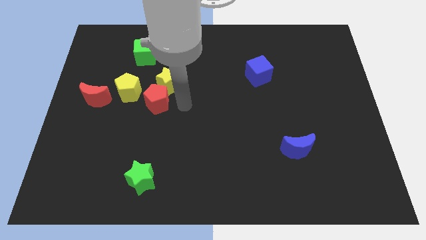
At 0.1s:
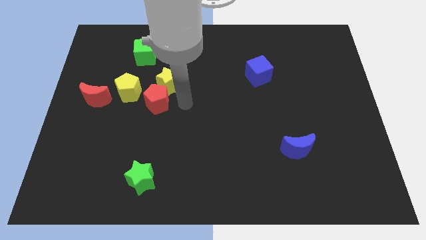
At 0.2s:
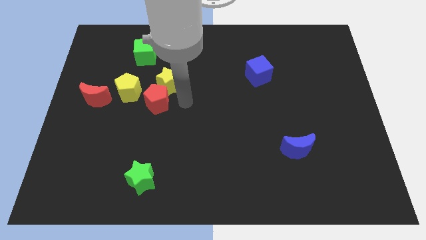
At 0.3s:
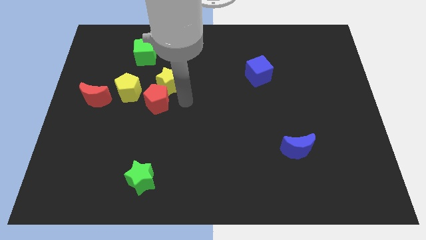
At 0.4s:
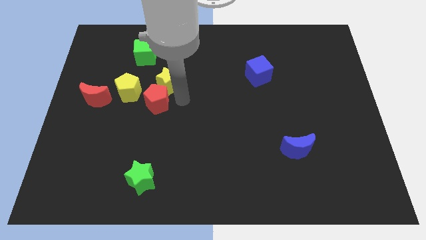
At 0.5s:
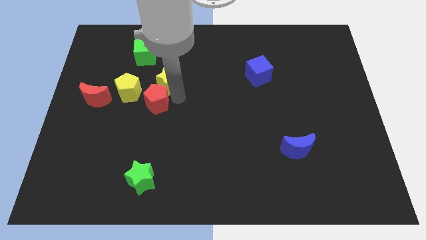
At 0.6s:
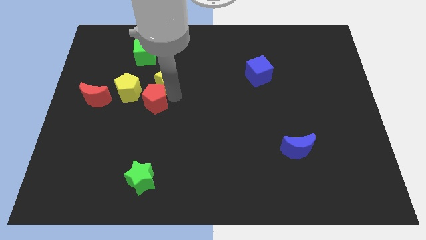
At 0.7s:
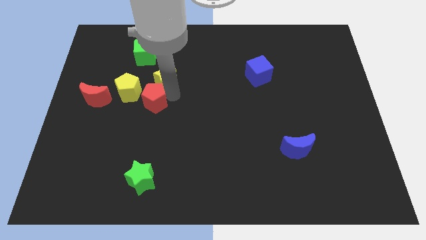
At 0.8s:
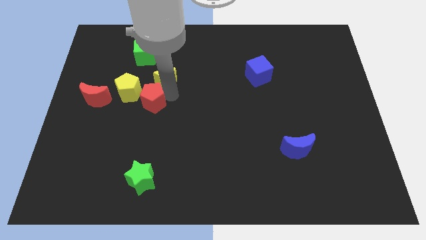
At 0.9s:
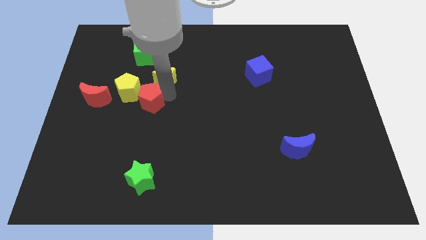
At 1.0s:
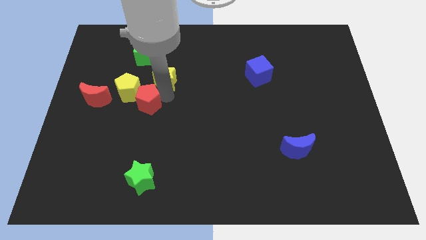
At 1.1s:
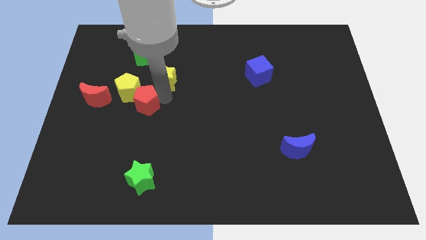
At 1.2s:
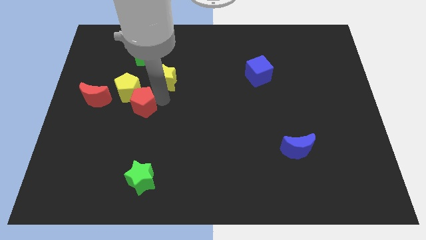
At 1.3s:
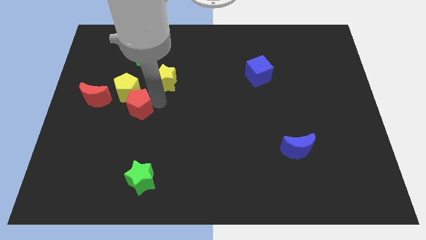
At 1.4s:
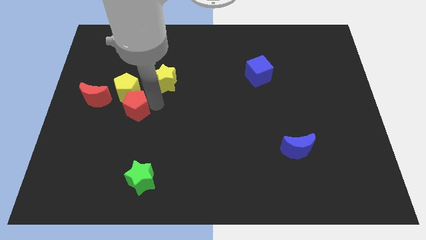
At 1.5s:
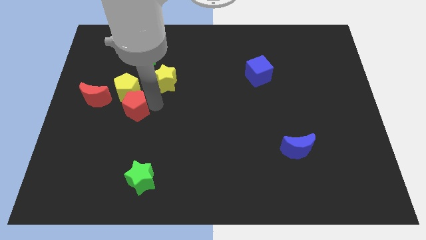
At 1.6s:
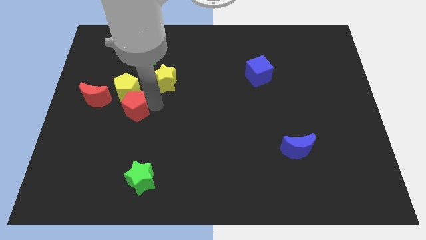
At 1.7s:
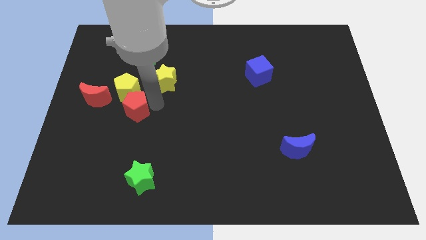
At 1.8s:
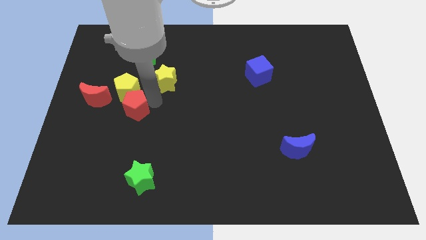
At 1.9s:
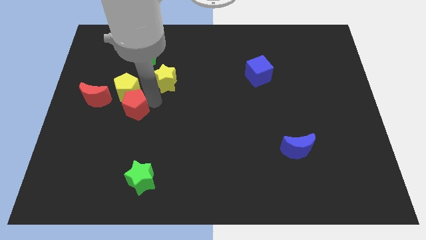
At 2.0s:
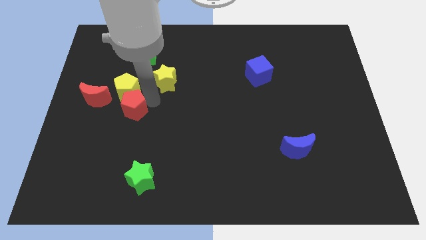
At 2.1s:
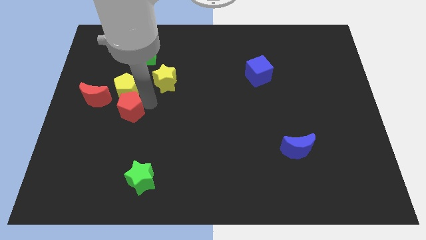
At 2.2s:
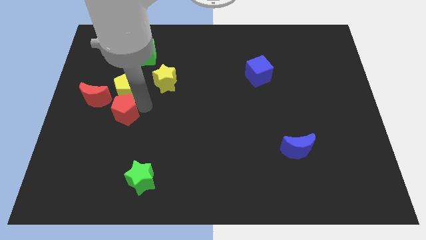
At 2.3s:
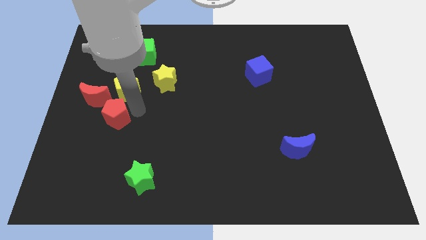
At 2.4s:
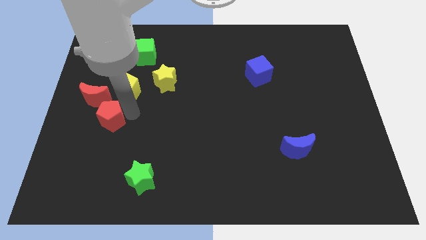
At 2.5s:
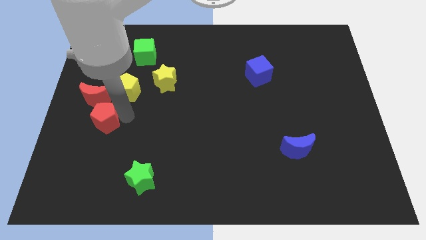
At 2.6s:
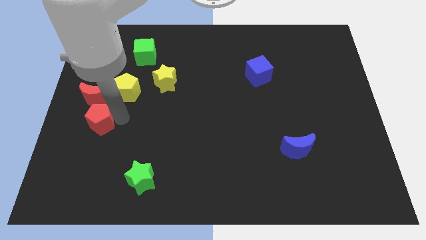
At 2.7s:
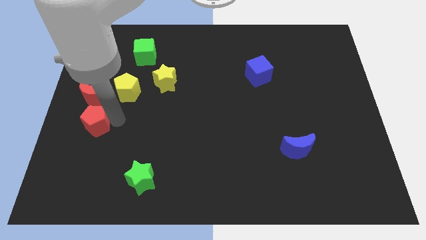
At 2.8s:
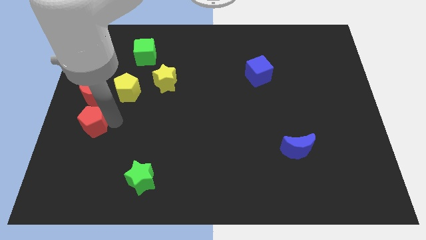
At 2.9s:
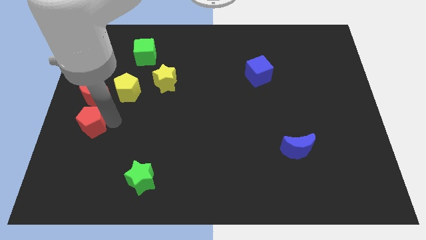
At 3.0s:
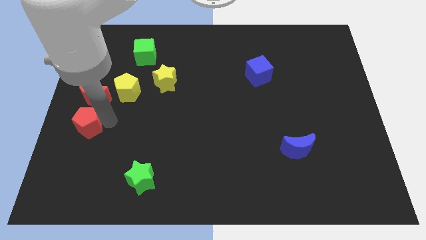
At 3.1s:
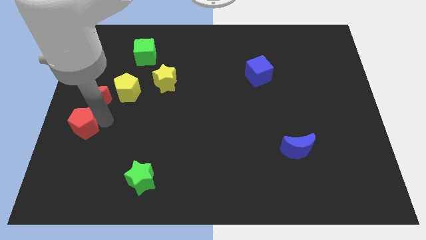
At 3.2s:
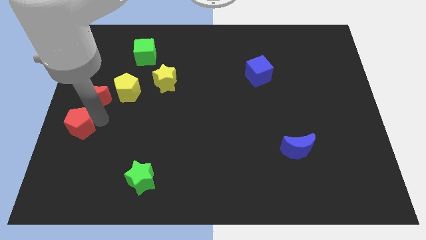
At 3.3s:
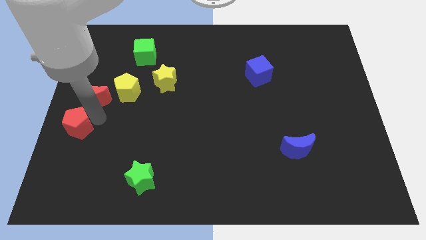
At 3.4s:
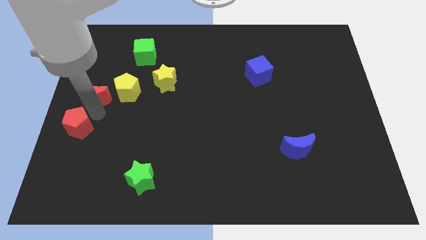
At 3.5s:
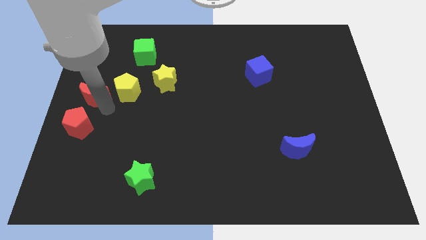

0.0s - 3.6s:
move the red pentagon diagonally on the bottom left side of the red crescent

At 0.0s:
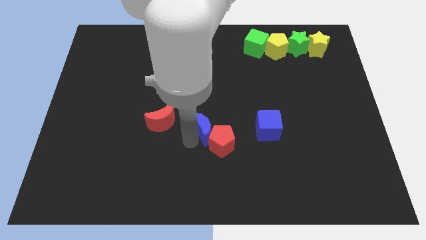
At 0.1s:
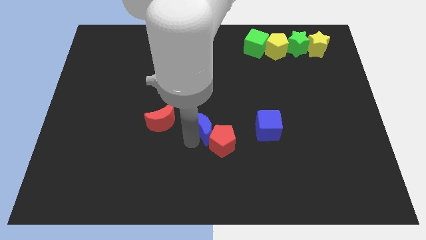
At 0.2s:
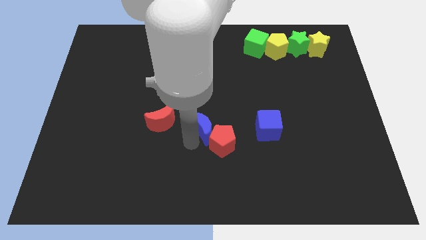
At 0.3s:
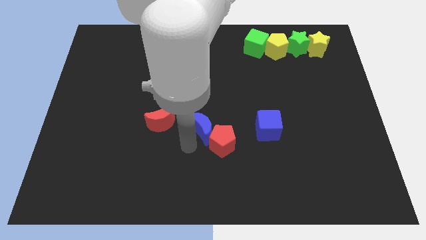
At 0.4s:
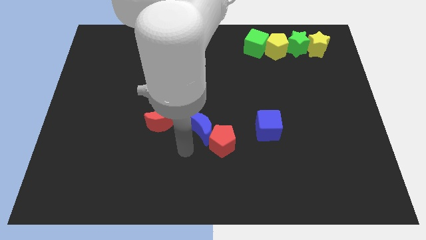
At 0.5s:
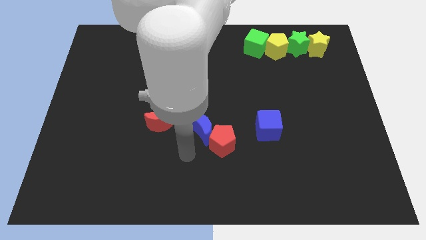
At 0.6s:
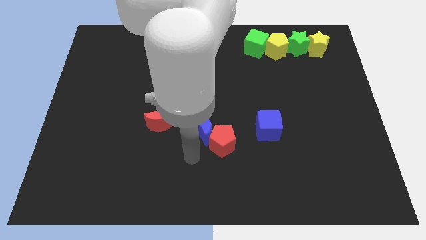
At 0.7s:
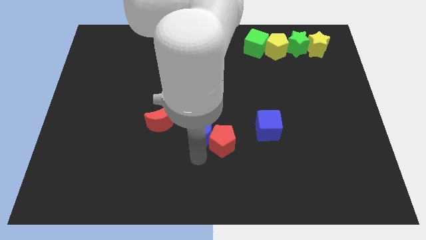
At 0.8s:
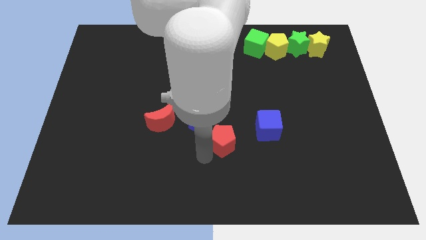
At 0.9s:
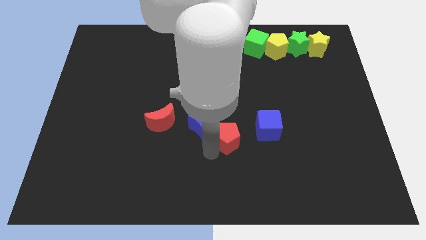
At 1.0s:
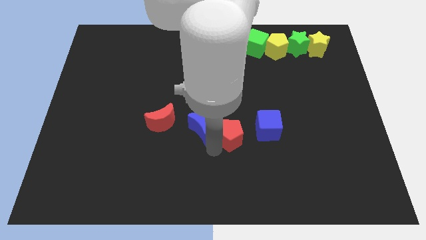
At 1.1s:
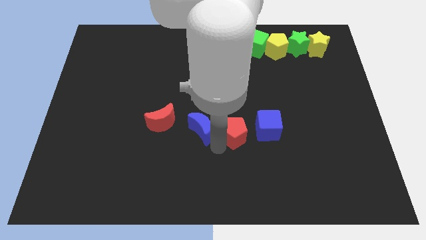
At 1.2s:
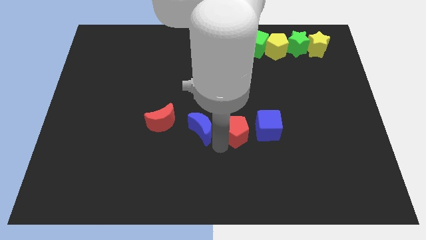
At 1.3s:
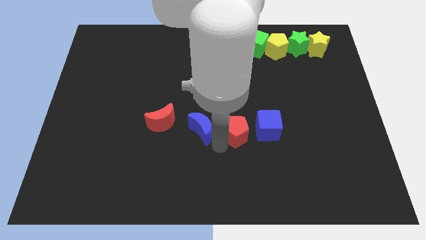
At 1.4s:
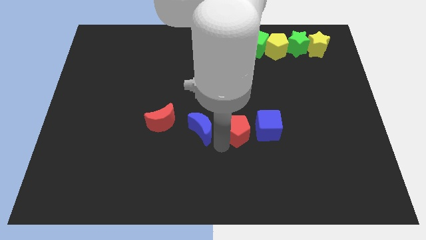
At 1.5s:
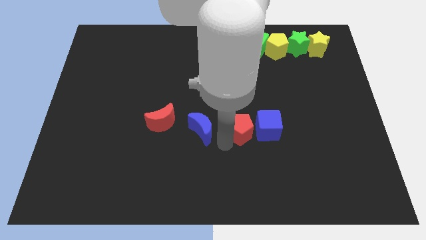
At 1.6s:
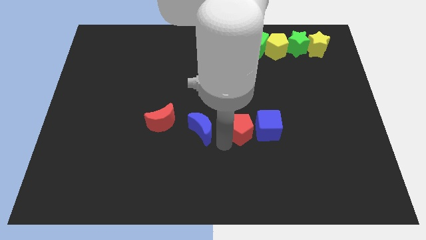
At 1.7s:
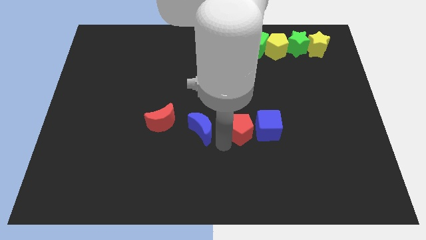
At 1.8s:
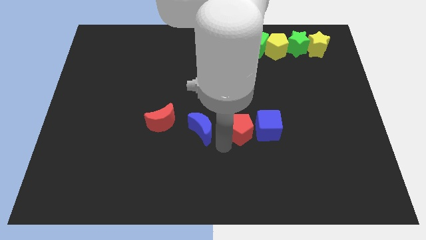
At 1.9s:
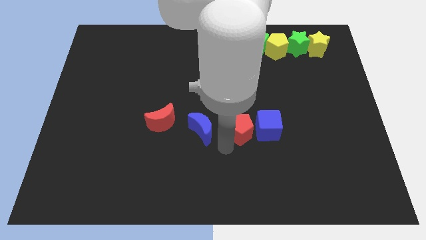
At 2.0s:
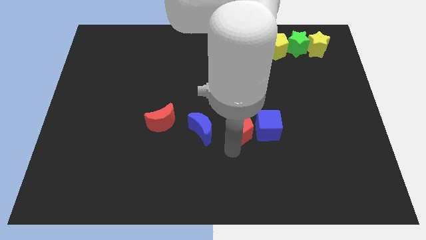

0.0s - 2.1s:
slightly push the red pentagon towards the left side of the blue cube

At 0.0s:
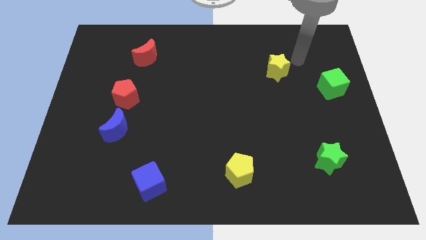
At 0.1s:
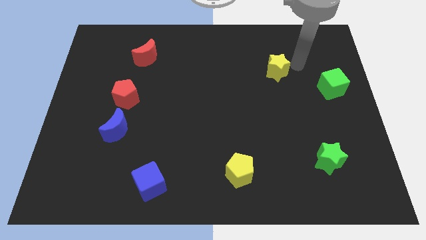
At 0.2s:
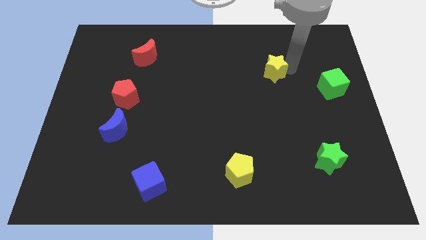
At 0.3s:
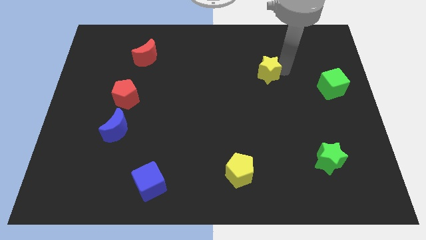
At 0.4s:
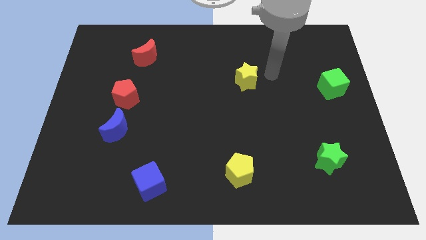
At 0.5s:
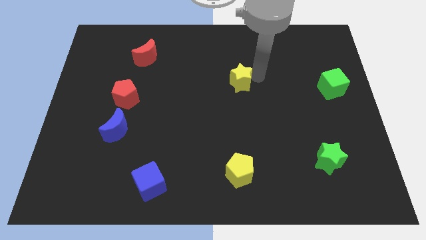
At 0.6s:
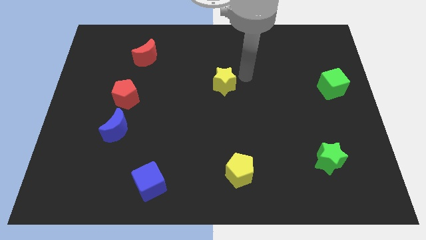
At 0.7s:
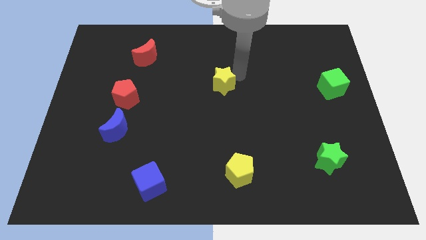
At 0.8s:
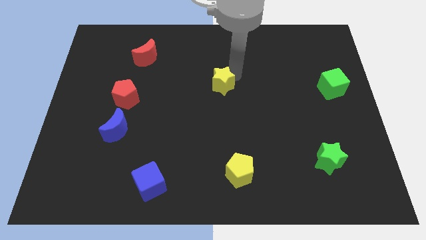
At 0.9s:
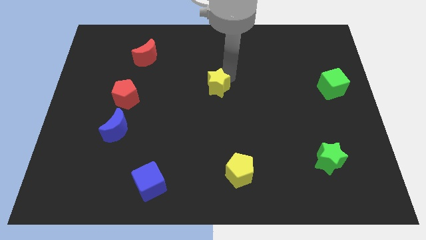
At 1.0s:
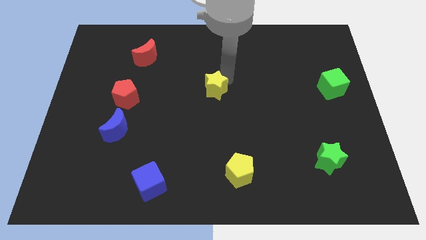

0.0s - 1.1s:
place the yellow star towards the center of the table

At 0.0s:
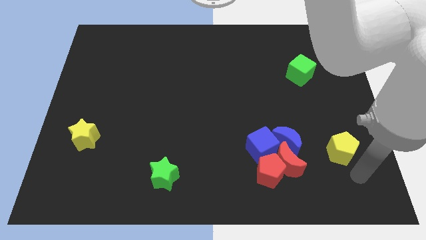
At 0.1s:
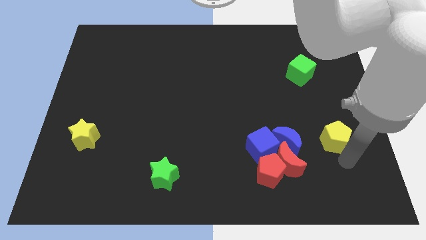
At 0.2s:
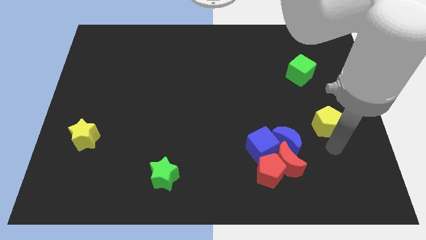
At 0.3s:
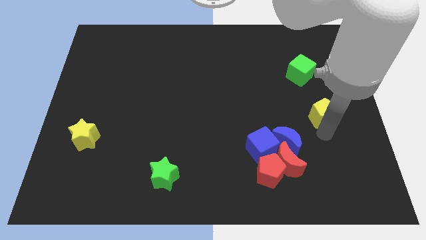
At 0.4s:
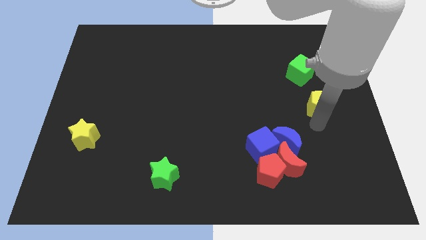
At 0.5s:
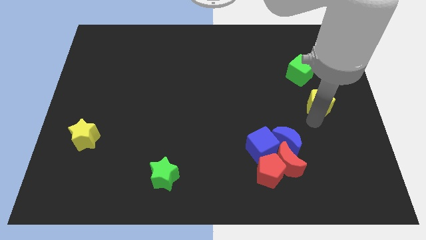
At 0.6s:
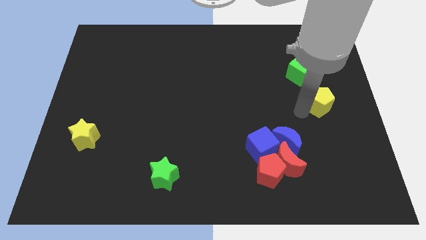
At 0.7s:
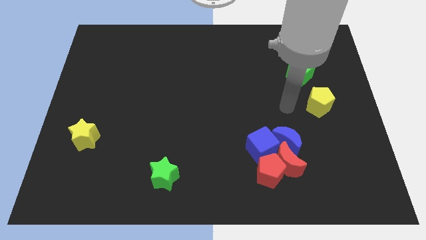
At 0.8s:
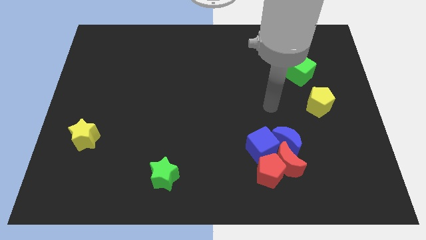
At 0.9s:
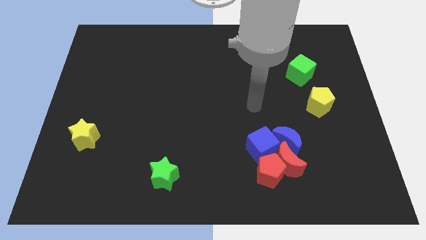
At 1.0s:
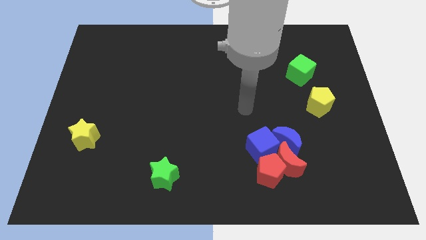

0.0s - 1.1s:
push yellow pentagon towards green cube

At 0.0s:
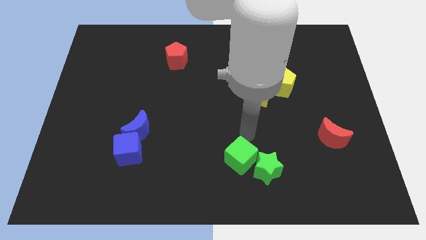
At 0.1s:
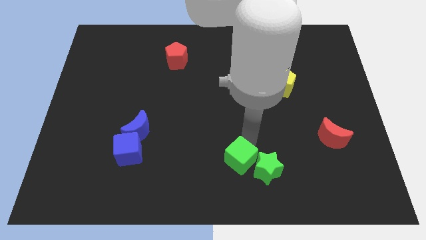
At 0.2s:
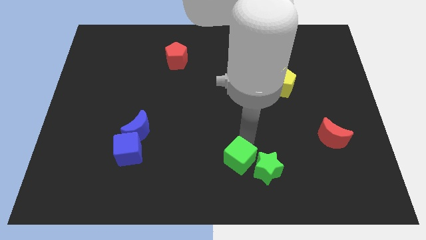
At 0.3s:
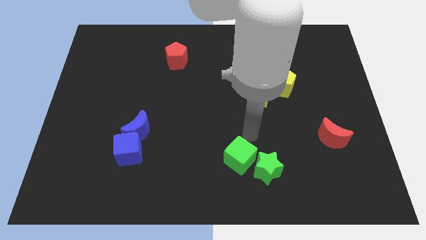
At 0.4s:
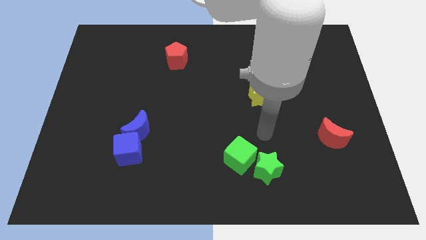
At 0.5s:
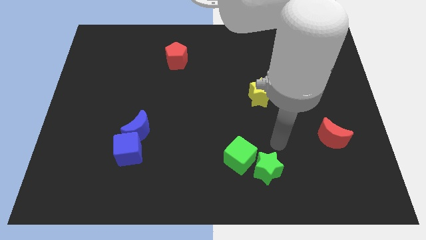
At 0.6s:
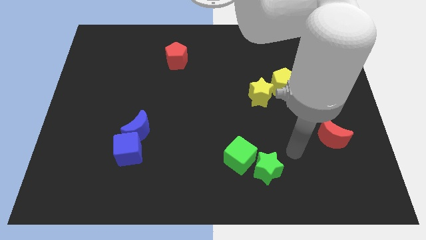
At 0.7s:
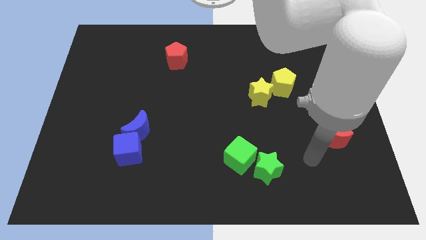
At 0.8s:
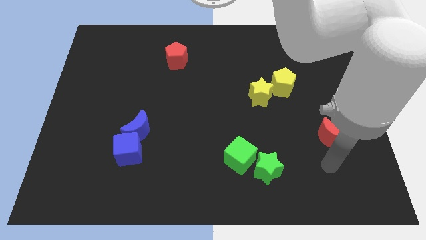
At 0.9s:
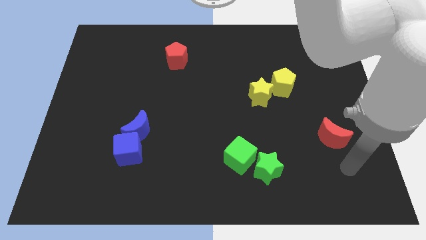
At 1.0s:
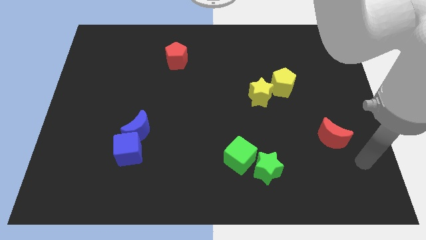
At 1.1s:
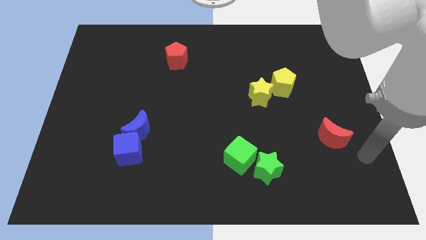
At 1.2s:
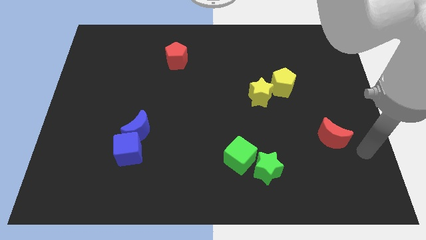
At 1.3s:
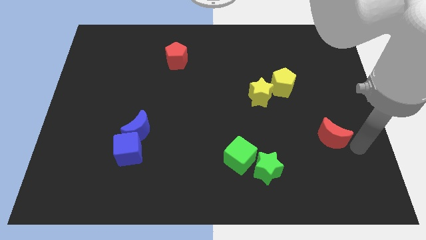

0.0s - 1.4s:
place your arm to the bottom right of the red moon
